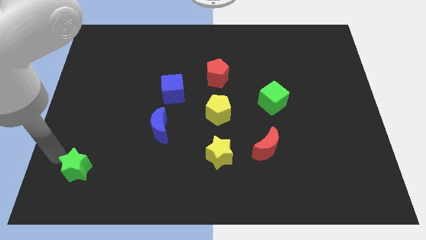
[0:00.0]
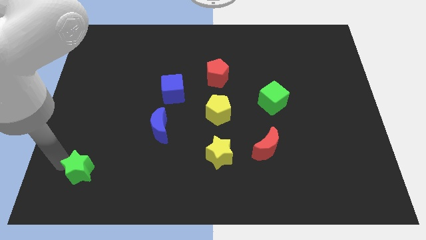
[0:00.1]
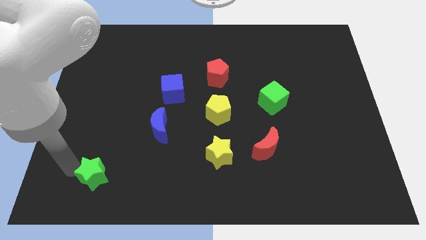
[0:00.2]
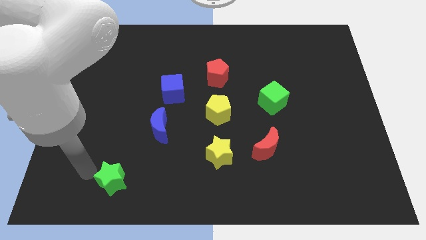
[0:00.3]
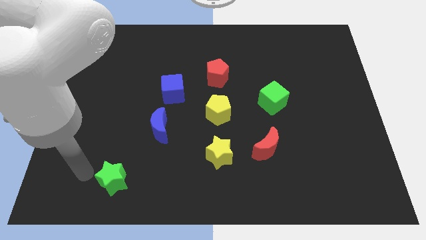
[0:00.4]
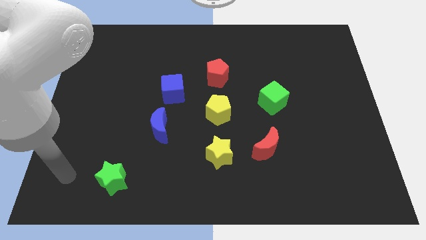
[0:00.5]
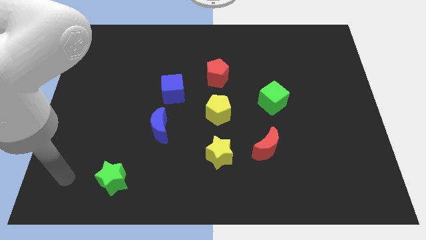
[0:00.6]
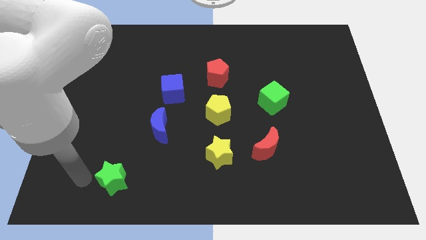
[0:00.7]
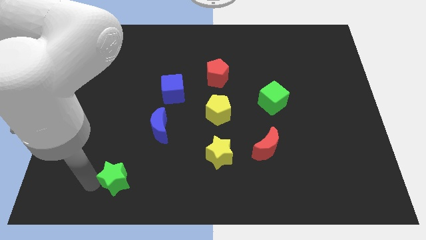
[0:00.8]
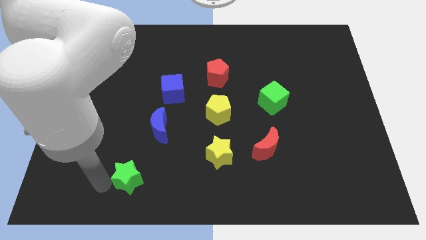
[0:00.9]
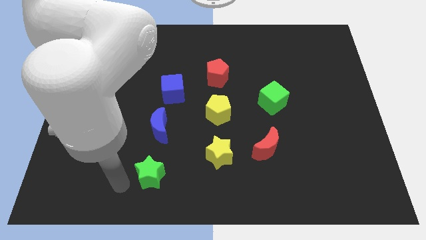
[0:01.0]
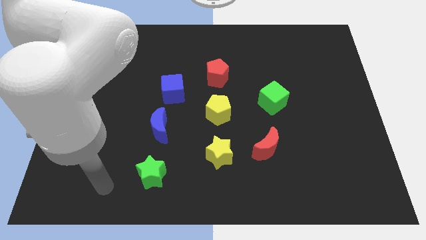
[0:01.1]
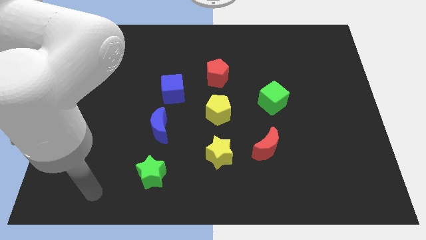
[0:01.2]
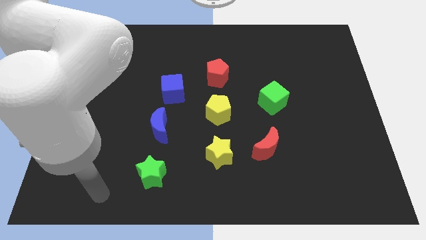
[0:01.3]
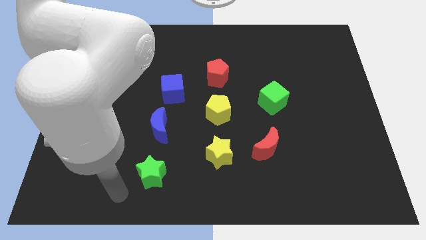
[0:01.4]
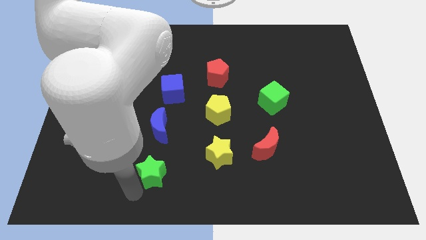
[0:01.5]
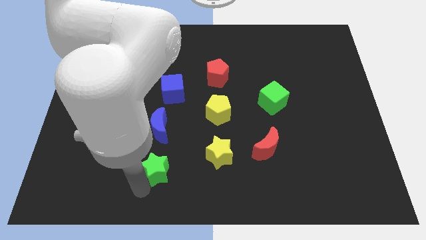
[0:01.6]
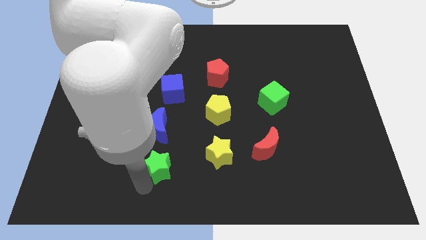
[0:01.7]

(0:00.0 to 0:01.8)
put the green star vertically below the bottom side of the blue crescent

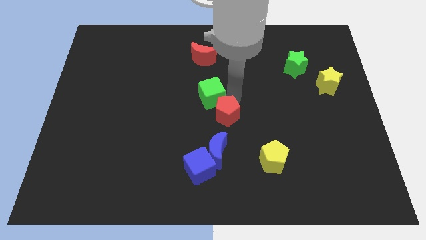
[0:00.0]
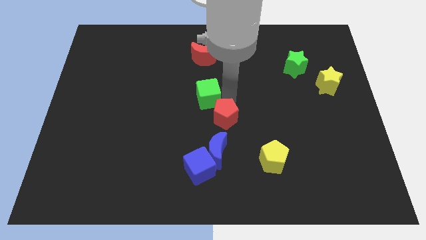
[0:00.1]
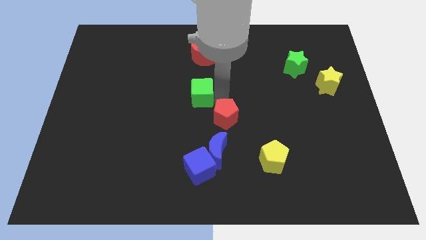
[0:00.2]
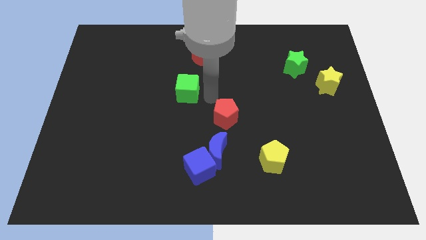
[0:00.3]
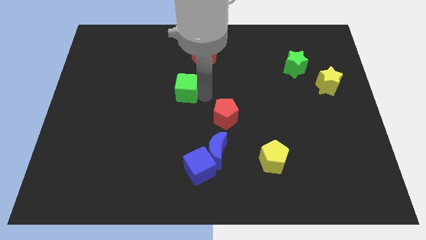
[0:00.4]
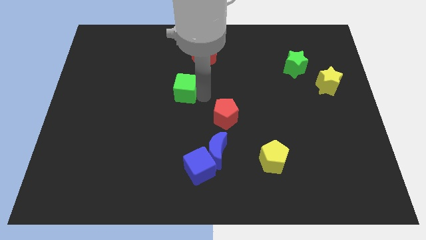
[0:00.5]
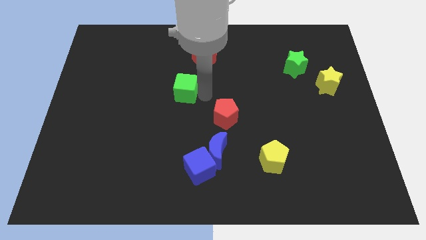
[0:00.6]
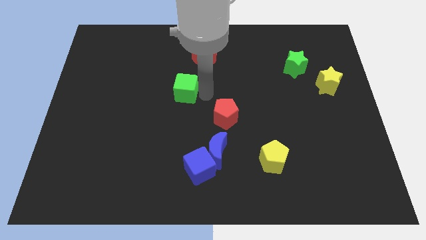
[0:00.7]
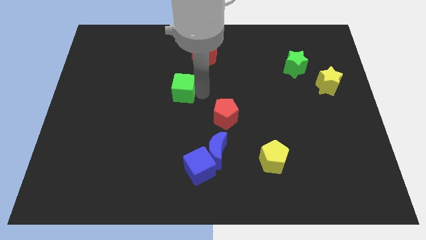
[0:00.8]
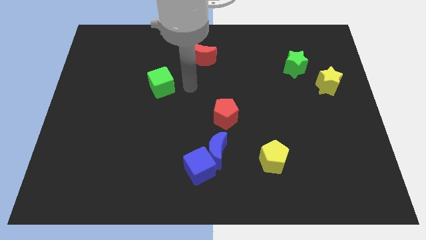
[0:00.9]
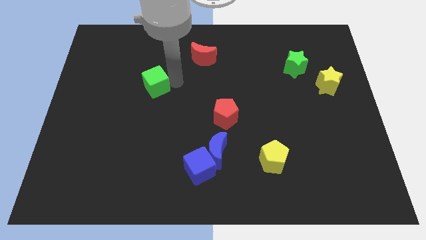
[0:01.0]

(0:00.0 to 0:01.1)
move the green cube to the bottom left of the red crescent

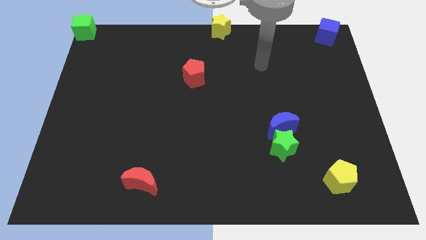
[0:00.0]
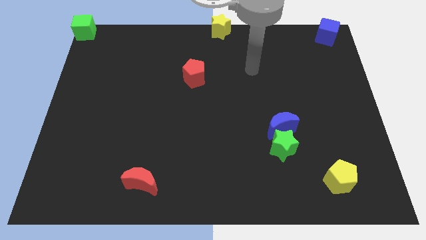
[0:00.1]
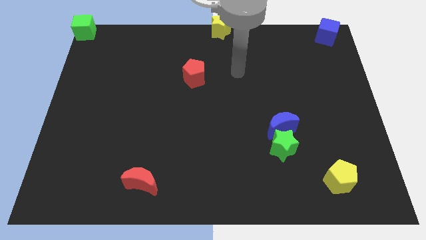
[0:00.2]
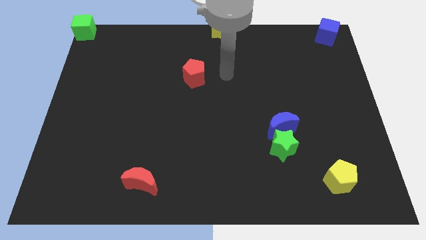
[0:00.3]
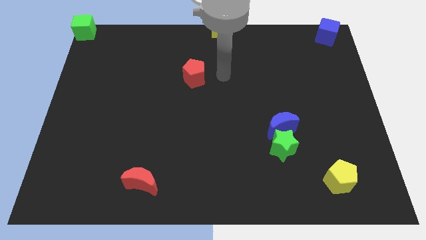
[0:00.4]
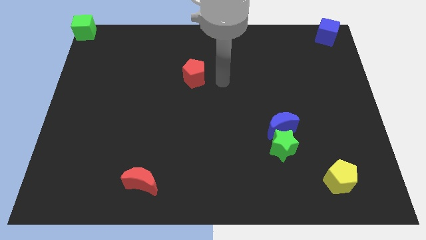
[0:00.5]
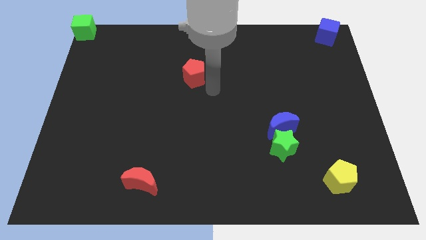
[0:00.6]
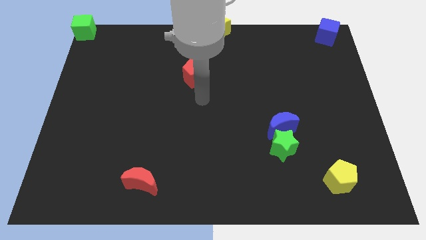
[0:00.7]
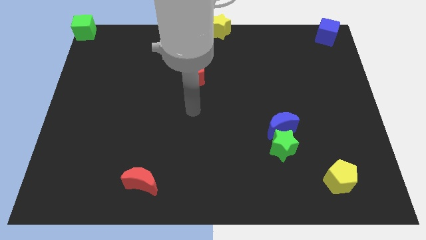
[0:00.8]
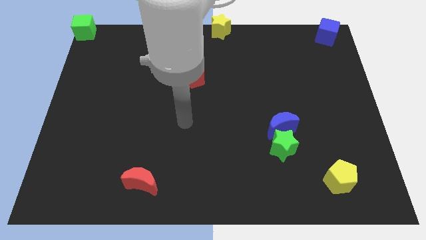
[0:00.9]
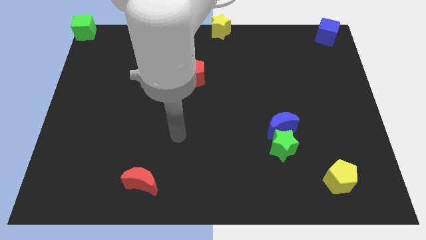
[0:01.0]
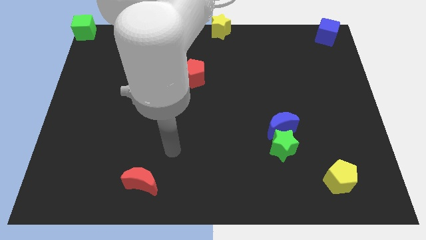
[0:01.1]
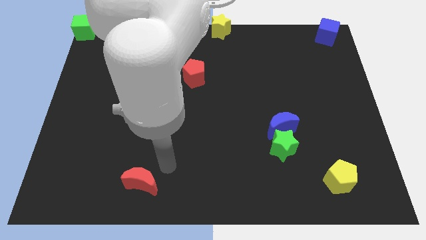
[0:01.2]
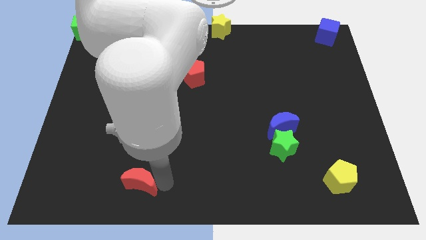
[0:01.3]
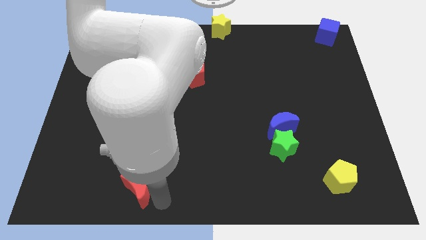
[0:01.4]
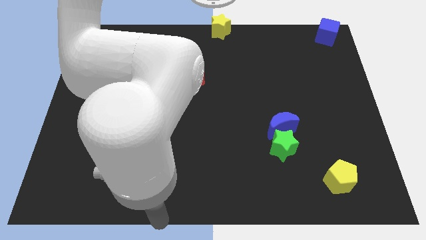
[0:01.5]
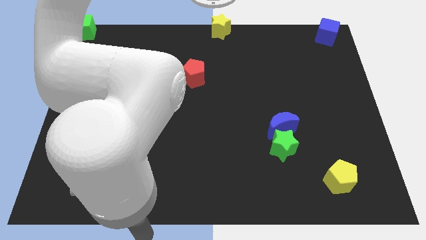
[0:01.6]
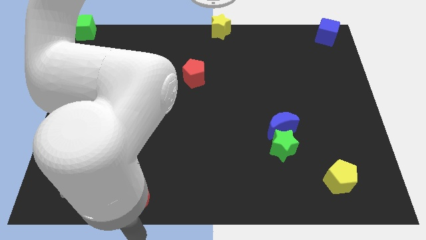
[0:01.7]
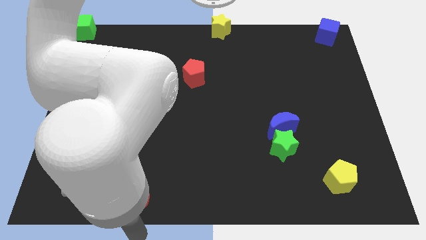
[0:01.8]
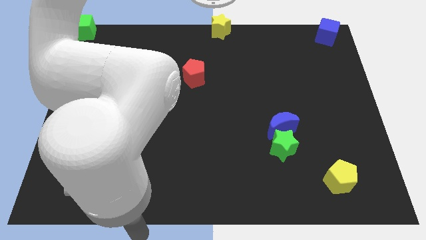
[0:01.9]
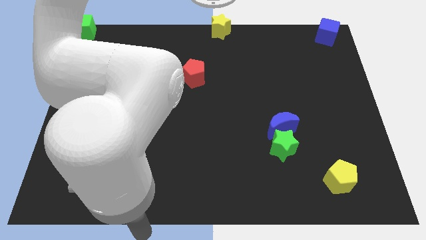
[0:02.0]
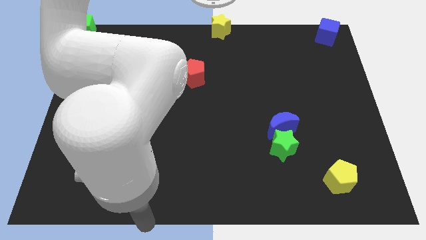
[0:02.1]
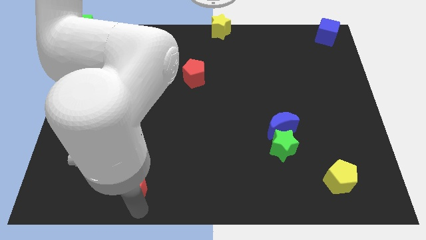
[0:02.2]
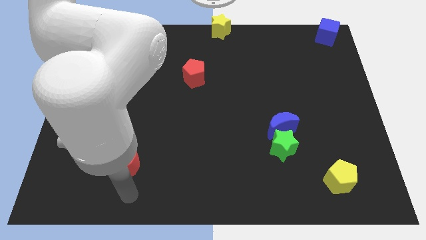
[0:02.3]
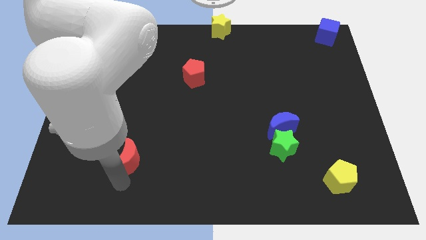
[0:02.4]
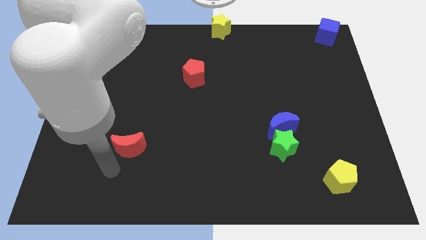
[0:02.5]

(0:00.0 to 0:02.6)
touch the bottom of red crescent

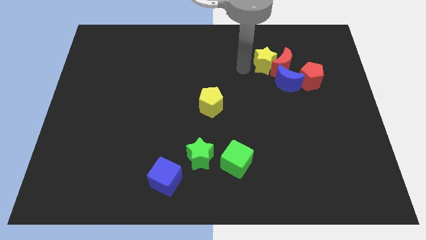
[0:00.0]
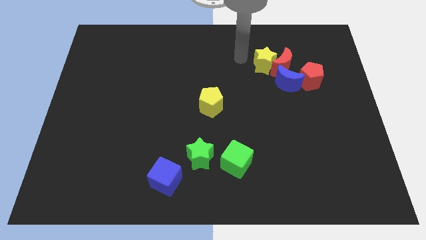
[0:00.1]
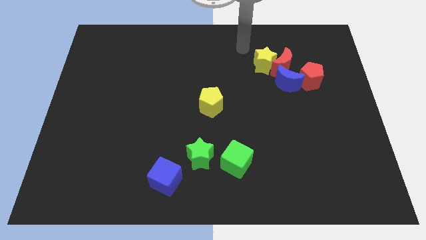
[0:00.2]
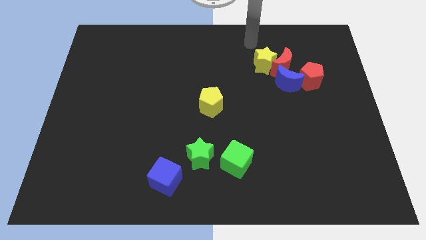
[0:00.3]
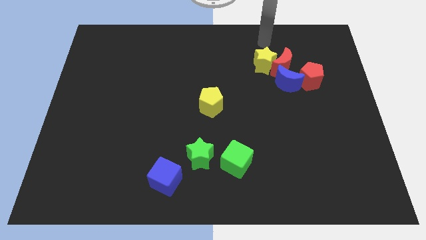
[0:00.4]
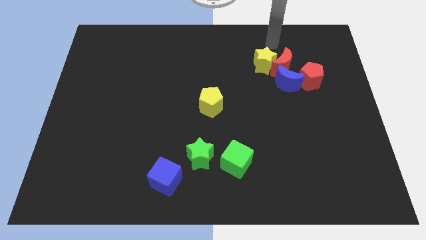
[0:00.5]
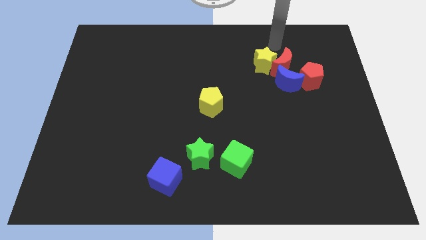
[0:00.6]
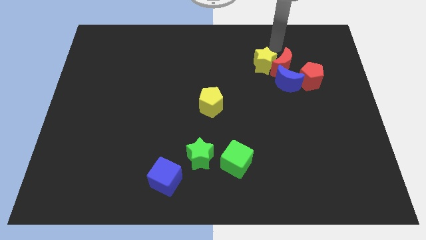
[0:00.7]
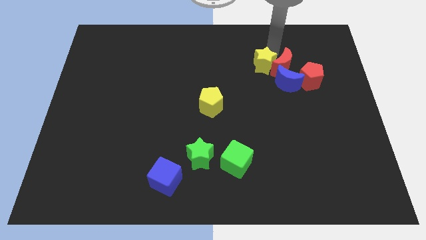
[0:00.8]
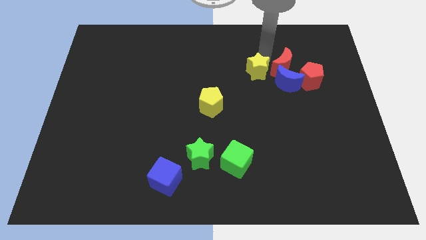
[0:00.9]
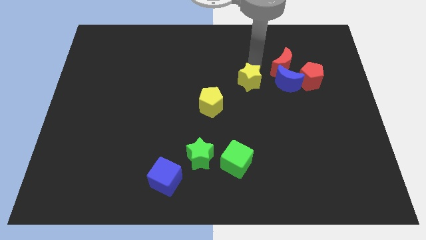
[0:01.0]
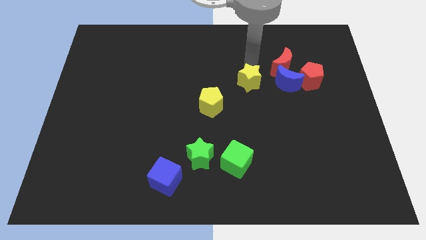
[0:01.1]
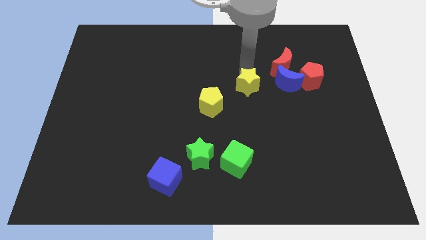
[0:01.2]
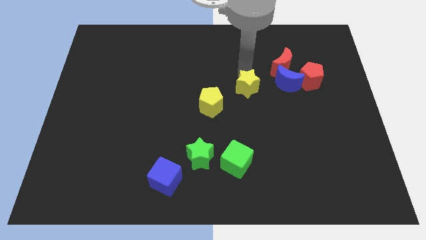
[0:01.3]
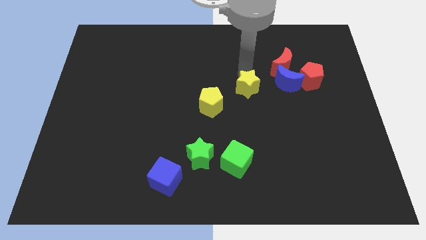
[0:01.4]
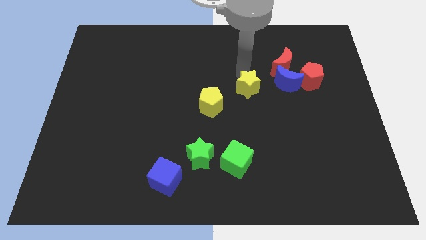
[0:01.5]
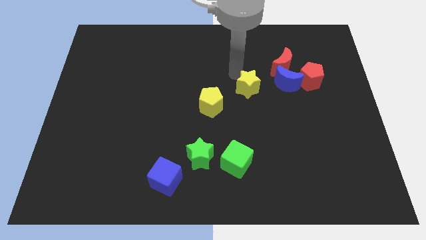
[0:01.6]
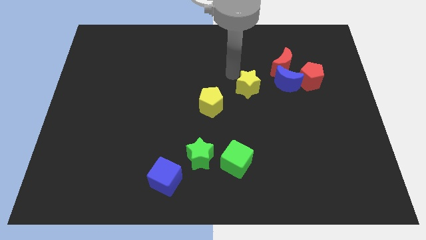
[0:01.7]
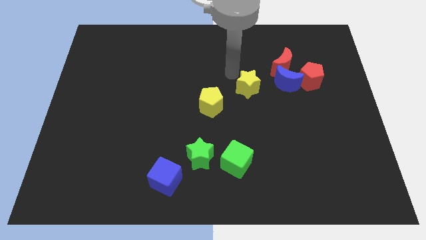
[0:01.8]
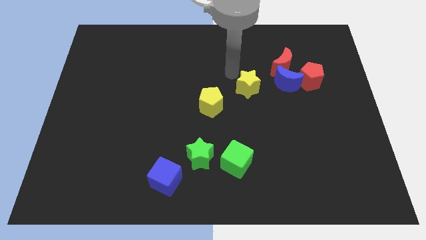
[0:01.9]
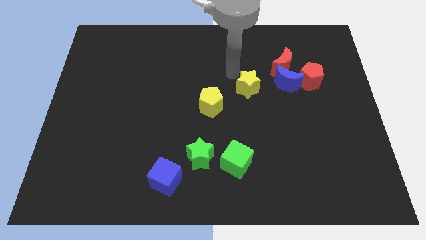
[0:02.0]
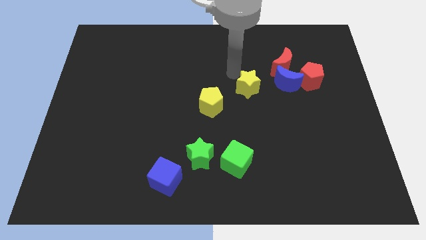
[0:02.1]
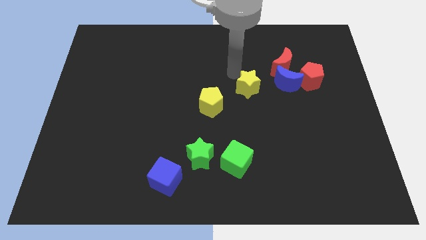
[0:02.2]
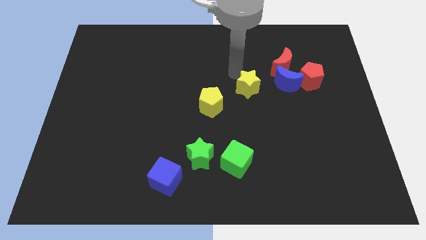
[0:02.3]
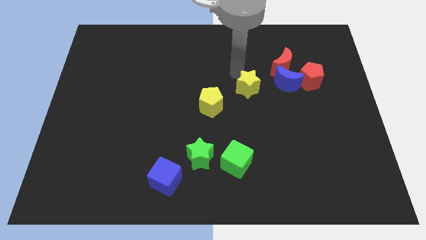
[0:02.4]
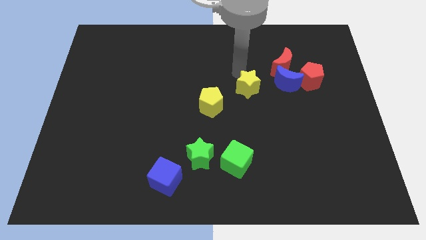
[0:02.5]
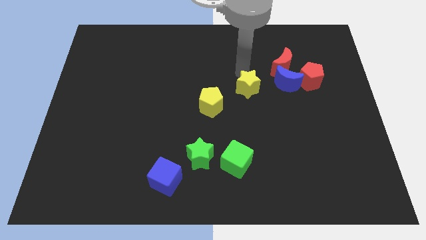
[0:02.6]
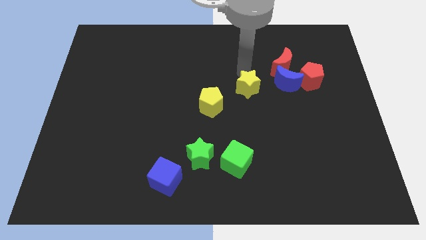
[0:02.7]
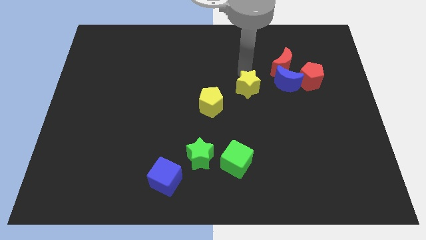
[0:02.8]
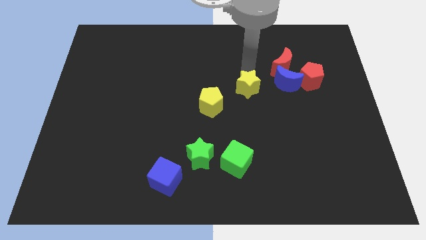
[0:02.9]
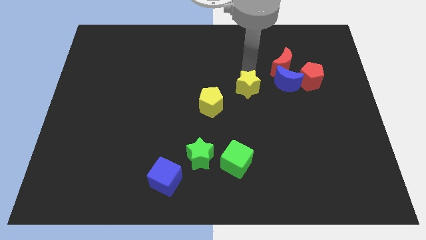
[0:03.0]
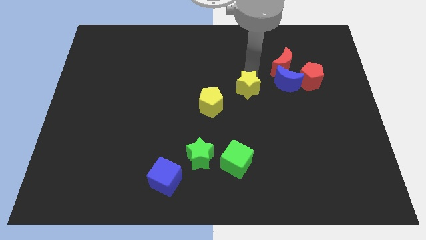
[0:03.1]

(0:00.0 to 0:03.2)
move the yellow star away from the red moon

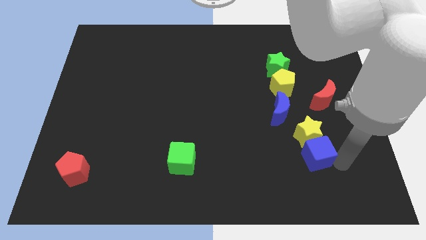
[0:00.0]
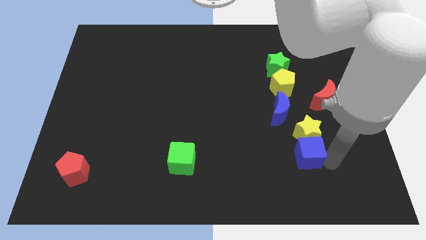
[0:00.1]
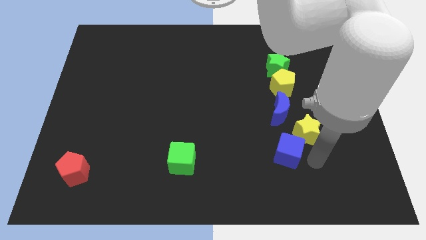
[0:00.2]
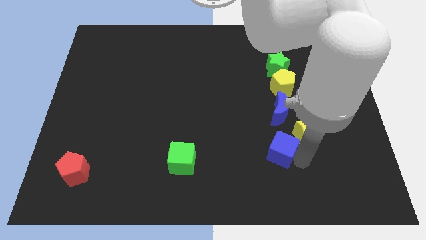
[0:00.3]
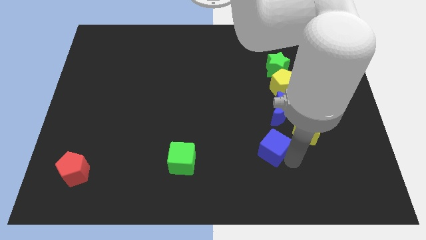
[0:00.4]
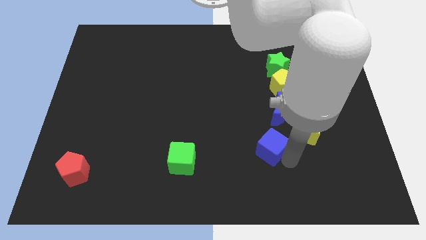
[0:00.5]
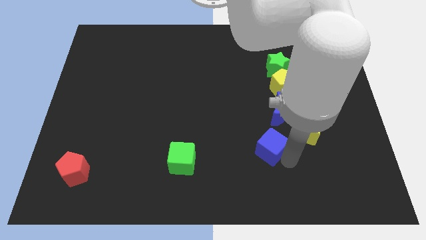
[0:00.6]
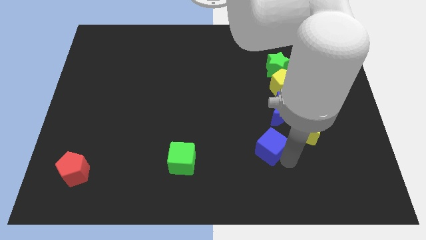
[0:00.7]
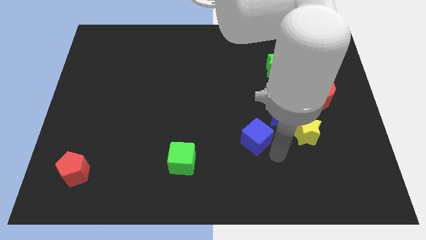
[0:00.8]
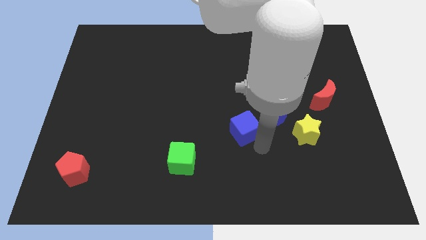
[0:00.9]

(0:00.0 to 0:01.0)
separate the blue cube and yellow star
